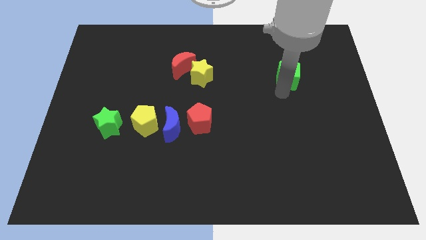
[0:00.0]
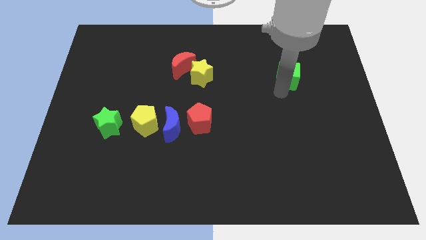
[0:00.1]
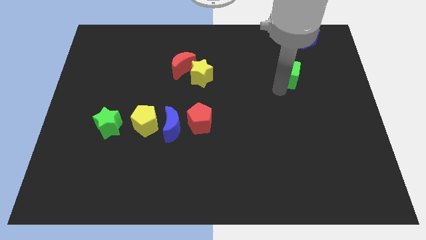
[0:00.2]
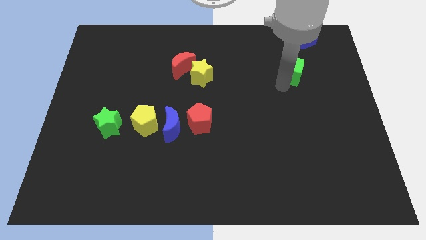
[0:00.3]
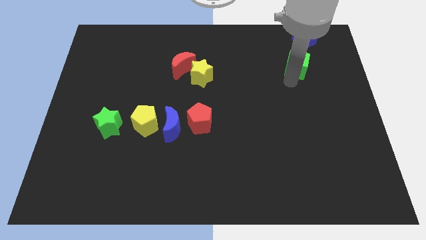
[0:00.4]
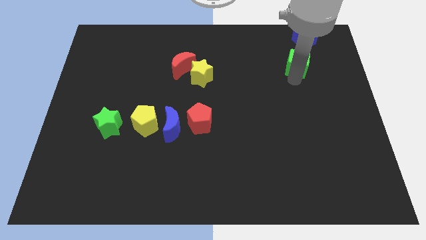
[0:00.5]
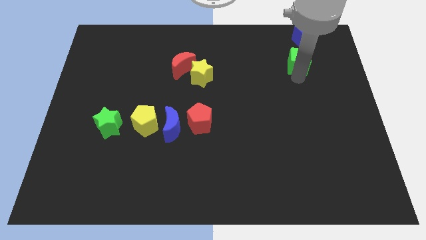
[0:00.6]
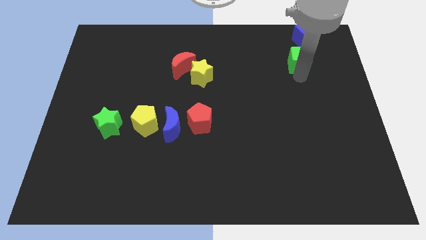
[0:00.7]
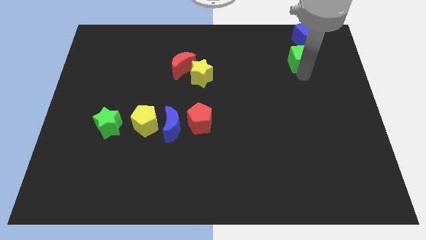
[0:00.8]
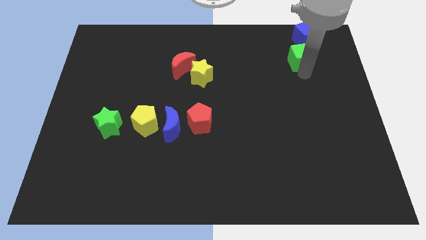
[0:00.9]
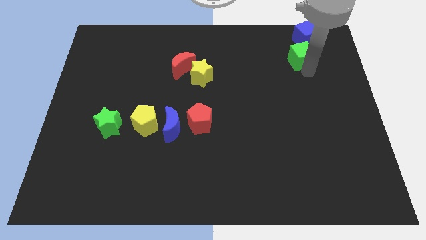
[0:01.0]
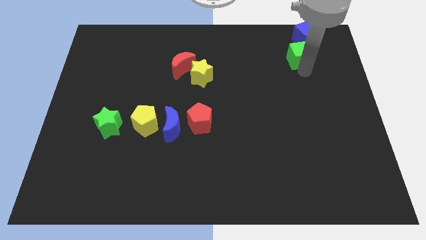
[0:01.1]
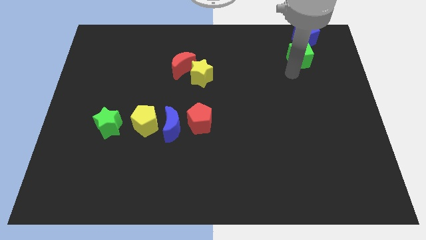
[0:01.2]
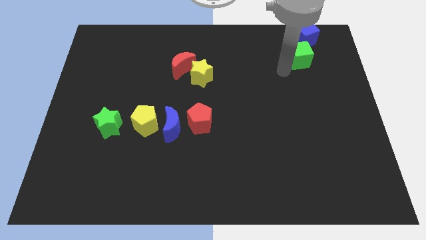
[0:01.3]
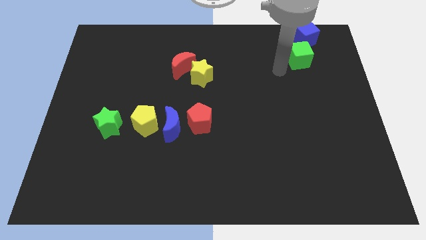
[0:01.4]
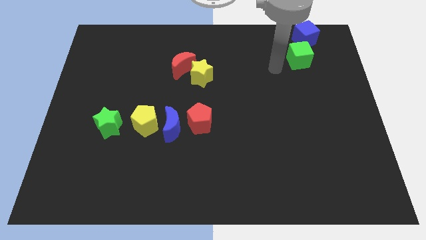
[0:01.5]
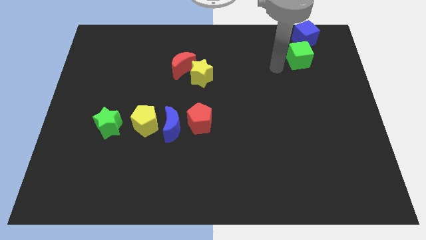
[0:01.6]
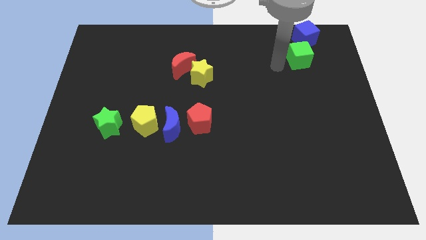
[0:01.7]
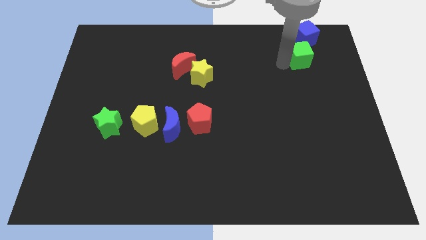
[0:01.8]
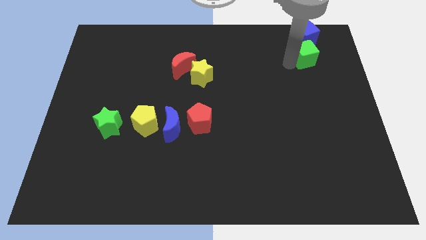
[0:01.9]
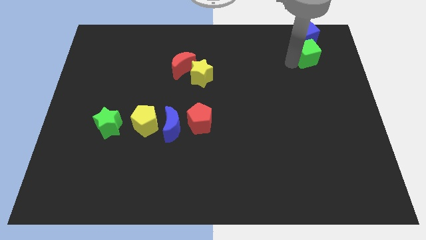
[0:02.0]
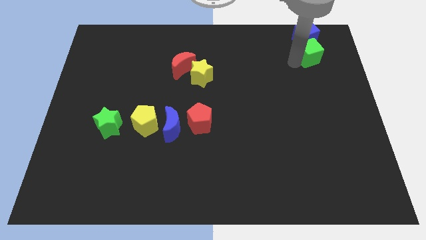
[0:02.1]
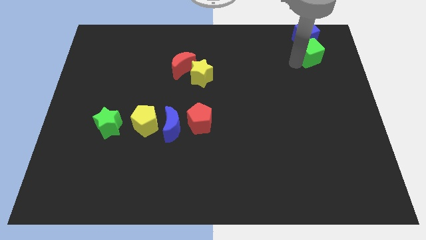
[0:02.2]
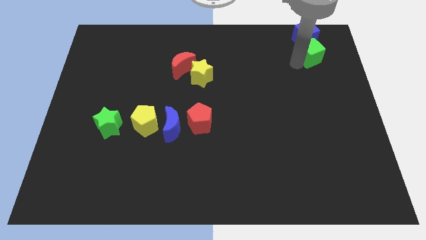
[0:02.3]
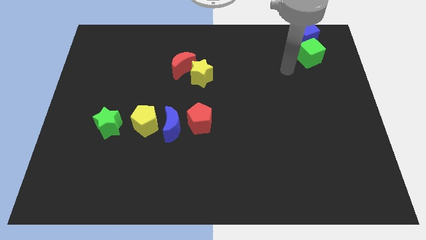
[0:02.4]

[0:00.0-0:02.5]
move the green cube into the blue cube

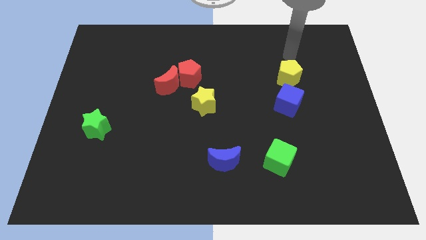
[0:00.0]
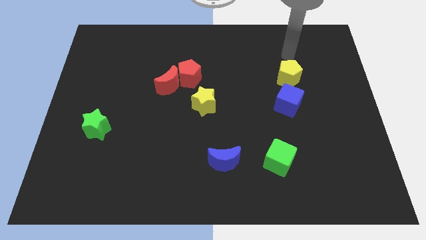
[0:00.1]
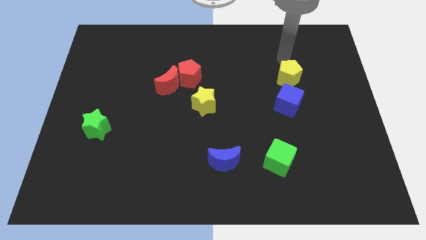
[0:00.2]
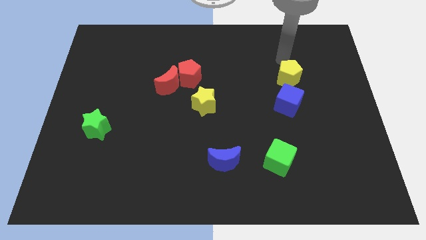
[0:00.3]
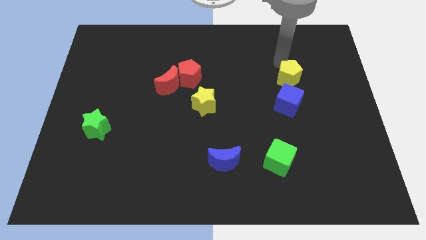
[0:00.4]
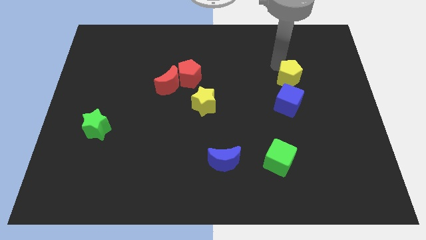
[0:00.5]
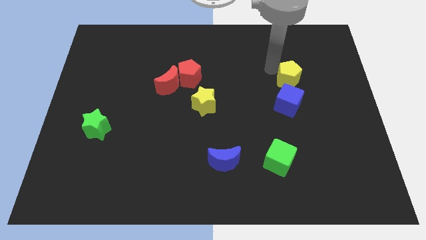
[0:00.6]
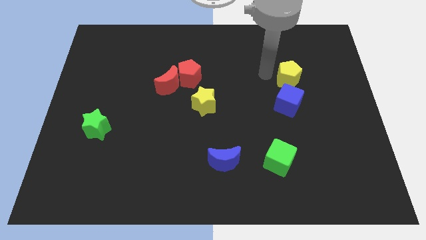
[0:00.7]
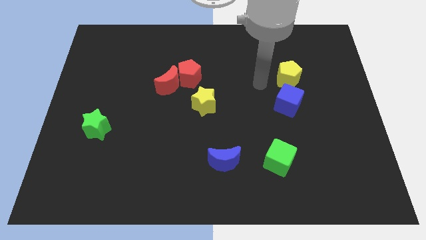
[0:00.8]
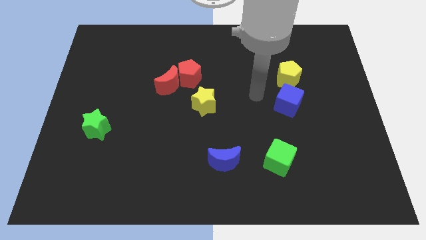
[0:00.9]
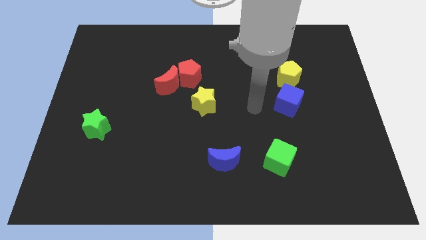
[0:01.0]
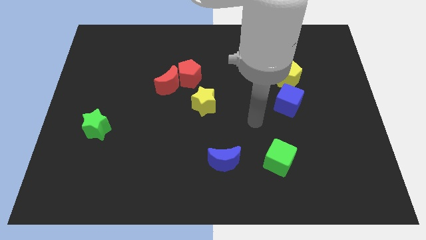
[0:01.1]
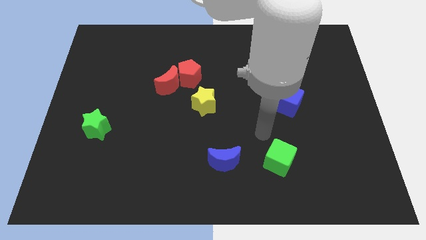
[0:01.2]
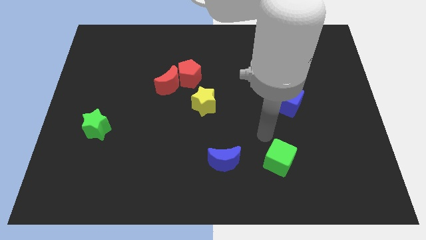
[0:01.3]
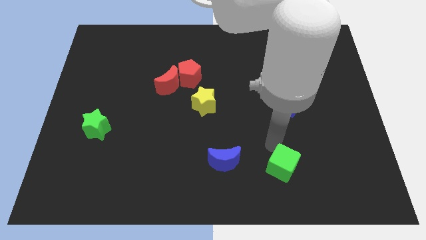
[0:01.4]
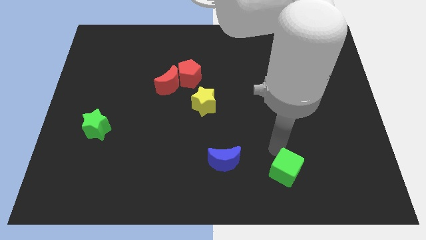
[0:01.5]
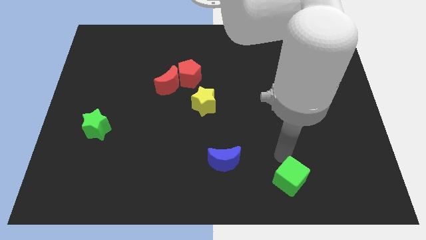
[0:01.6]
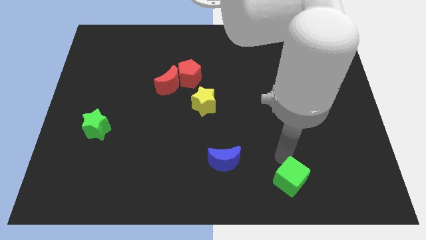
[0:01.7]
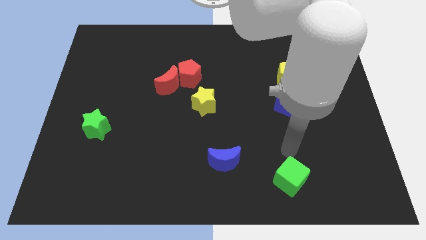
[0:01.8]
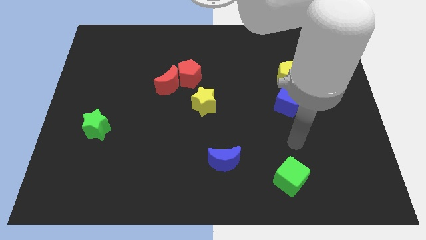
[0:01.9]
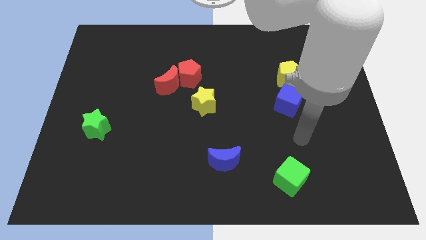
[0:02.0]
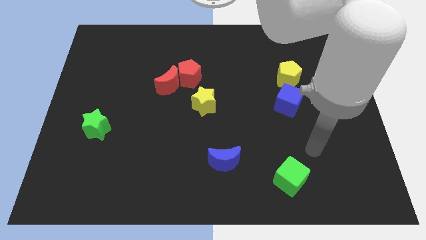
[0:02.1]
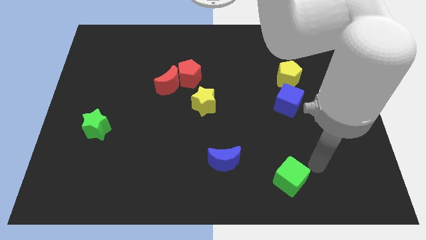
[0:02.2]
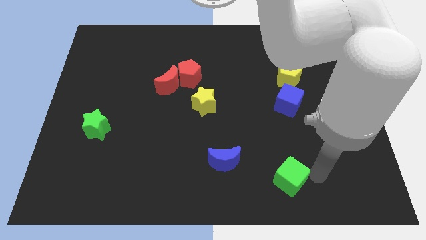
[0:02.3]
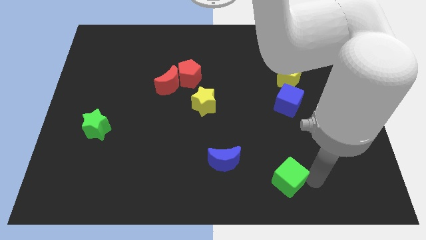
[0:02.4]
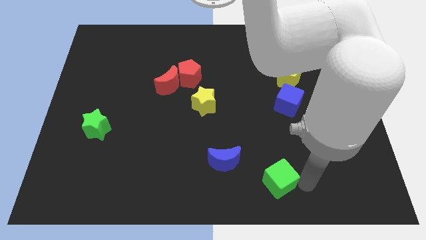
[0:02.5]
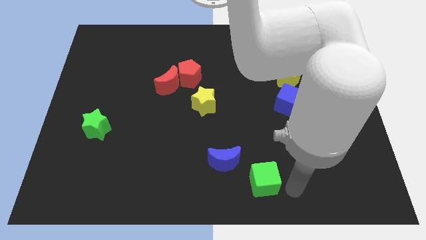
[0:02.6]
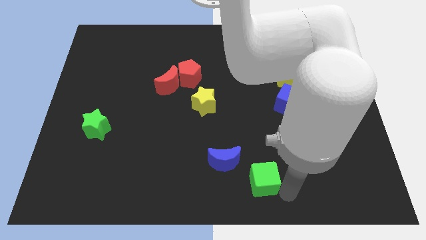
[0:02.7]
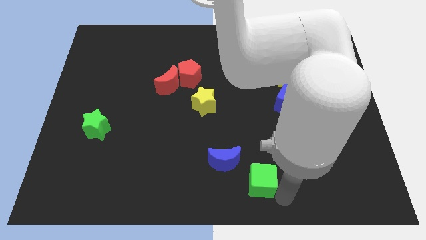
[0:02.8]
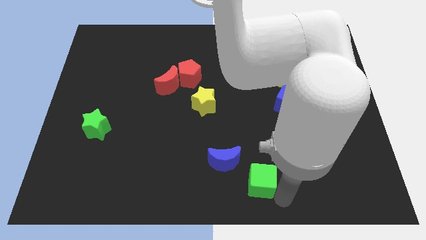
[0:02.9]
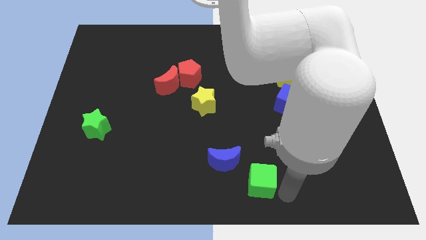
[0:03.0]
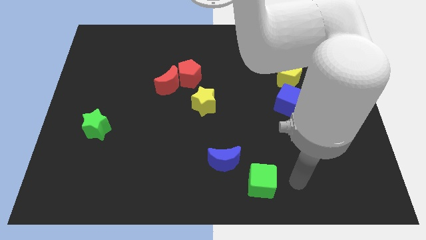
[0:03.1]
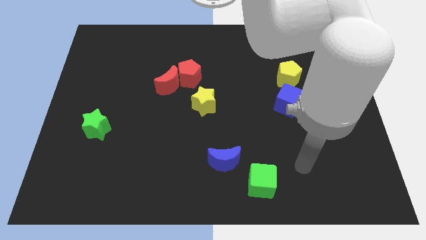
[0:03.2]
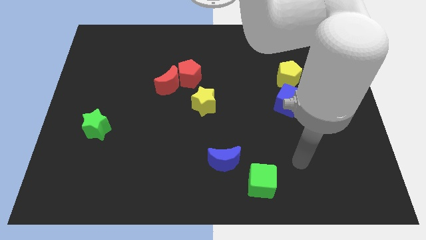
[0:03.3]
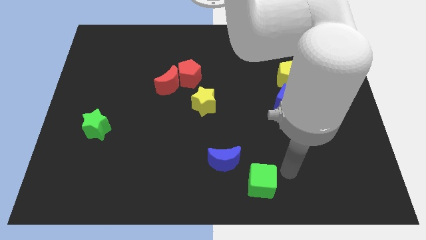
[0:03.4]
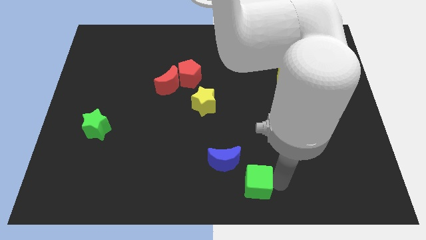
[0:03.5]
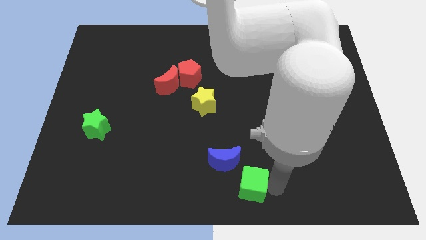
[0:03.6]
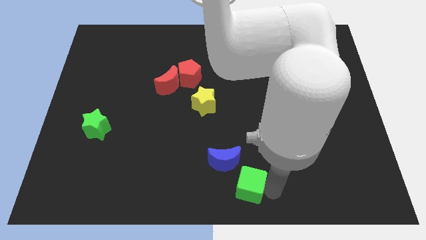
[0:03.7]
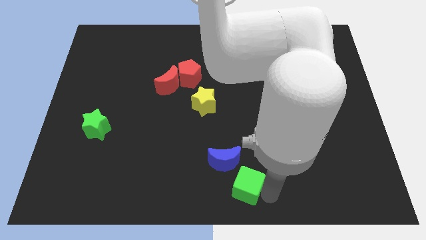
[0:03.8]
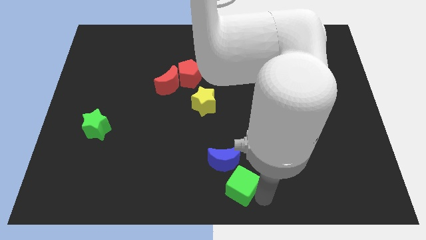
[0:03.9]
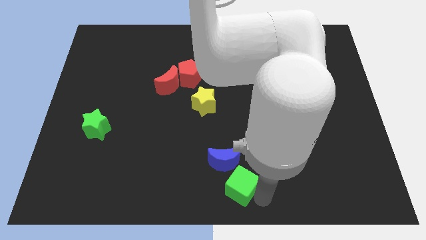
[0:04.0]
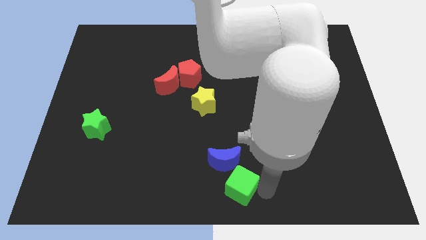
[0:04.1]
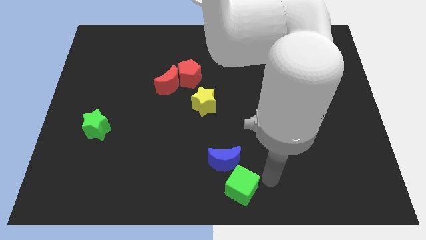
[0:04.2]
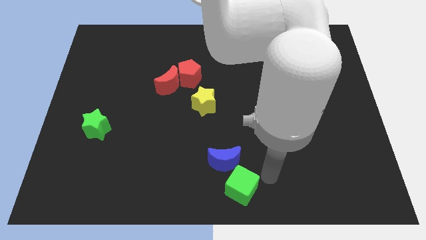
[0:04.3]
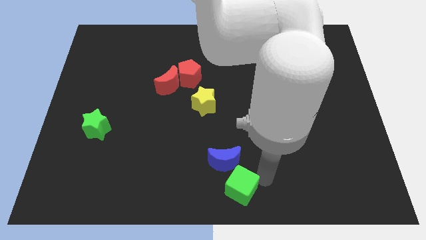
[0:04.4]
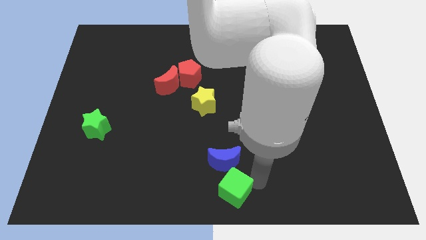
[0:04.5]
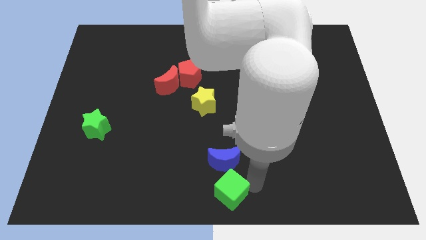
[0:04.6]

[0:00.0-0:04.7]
place the green cube under the blue crescent

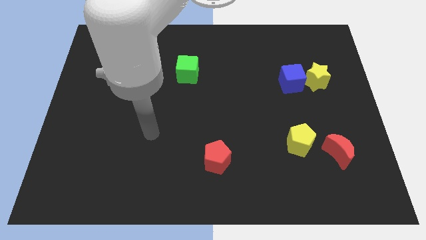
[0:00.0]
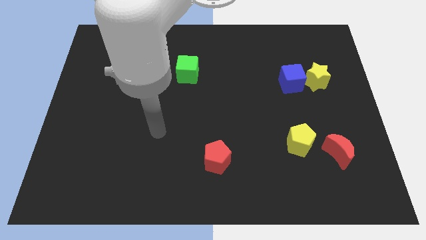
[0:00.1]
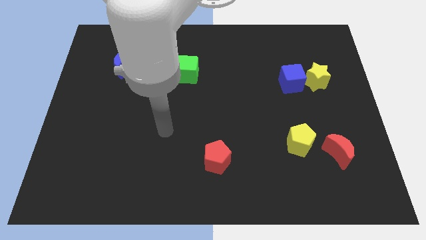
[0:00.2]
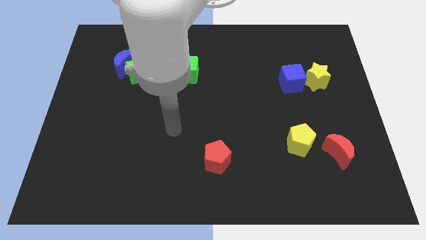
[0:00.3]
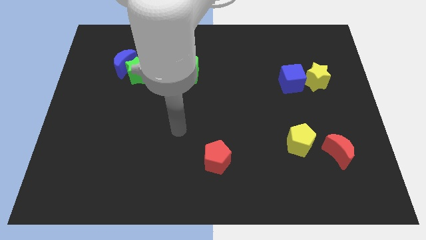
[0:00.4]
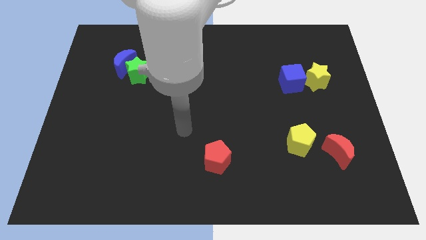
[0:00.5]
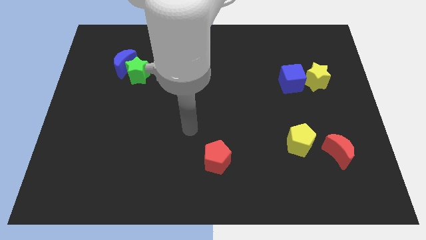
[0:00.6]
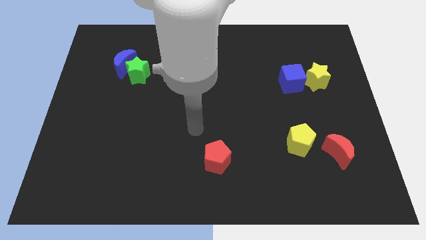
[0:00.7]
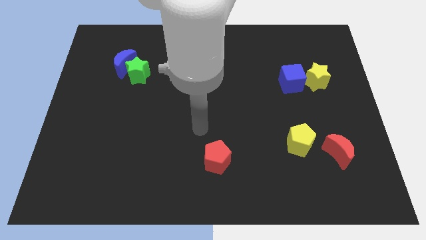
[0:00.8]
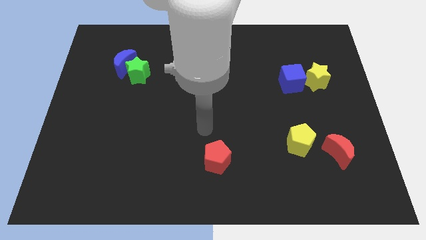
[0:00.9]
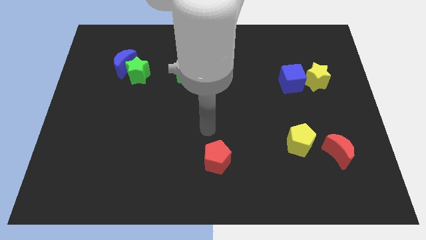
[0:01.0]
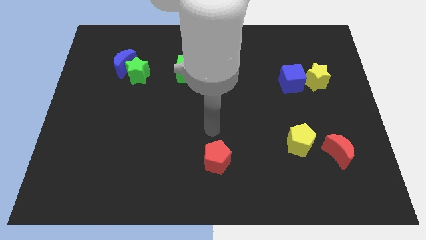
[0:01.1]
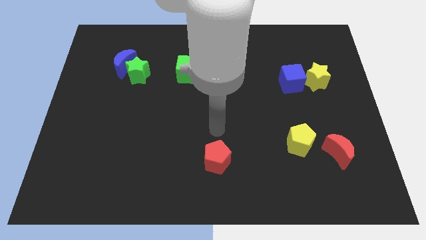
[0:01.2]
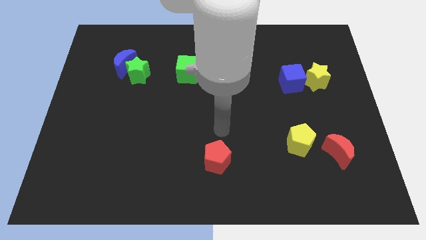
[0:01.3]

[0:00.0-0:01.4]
point your hand at the top side of the red pentagon

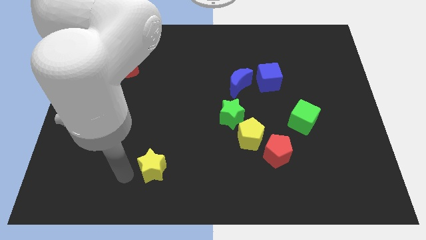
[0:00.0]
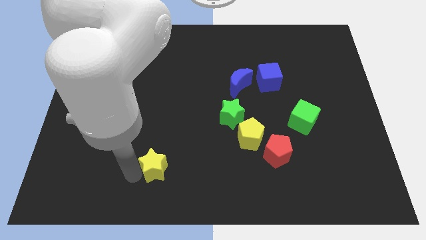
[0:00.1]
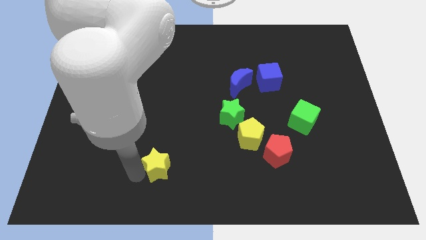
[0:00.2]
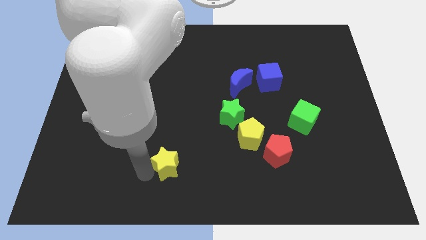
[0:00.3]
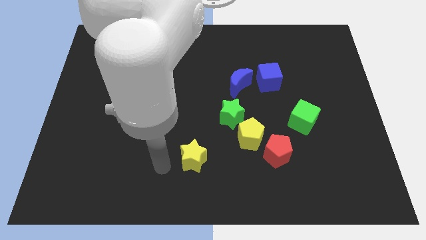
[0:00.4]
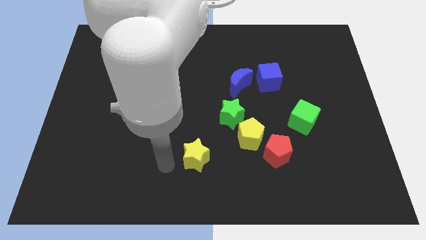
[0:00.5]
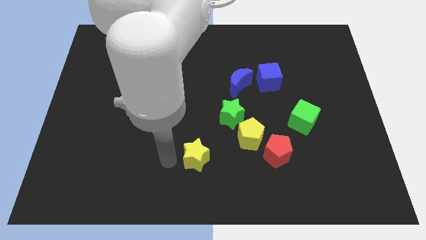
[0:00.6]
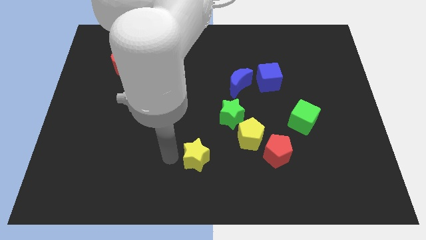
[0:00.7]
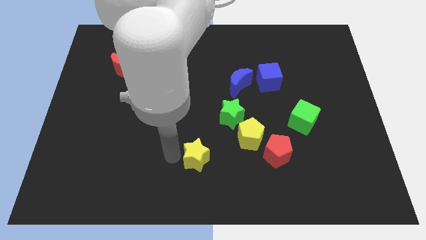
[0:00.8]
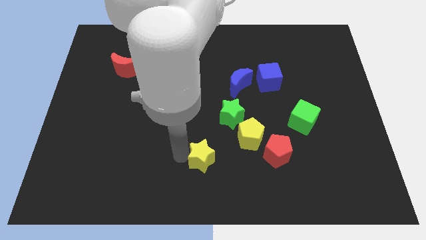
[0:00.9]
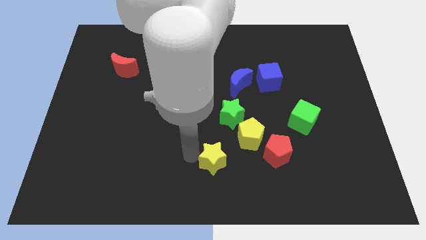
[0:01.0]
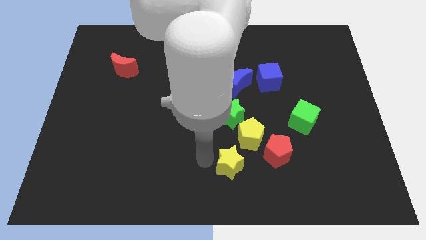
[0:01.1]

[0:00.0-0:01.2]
drag the yellow star diagonally bottom left to yellow pentagon
